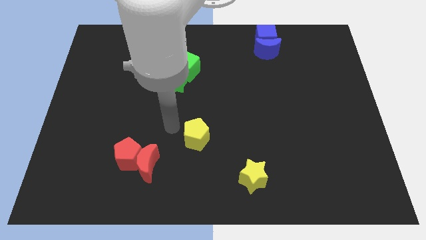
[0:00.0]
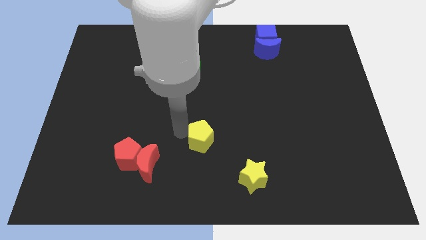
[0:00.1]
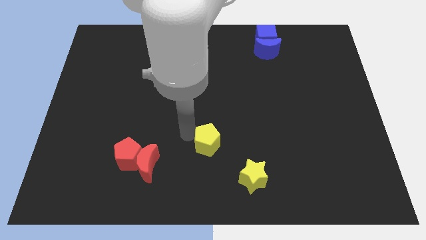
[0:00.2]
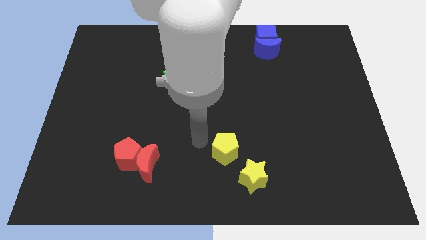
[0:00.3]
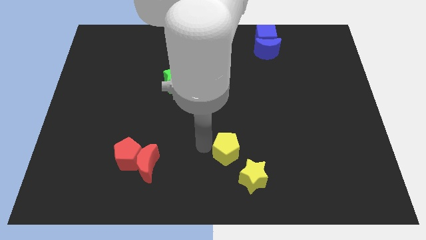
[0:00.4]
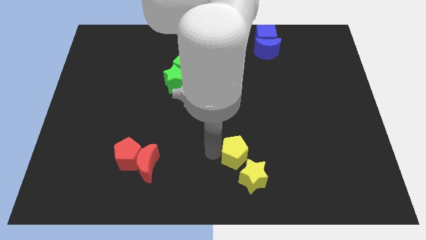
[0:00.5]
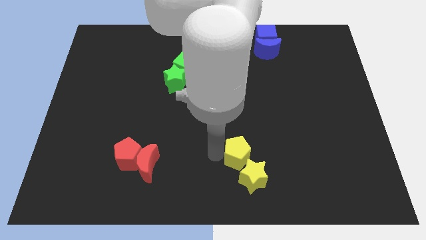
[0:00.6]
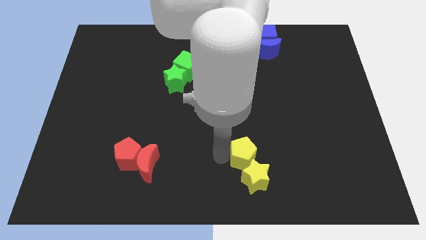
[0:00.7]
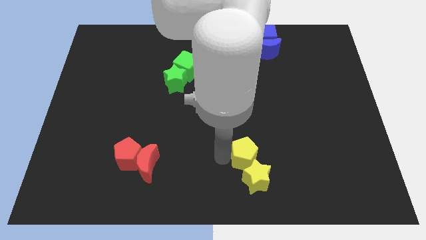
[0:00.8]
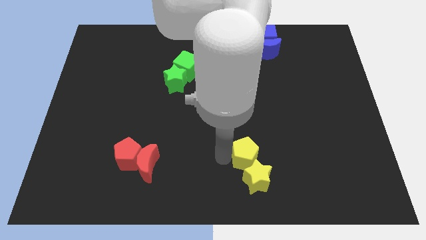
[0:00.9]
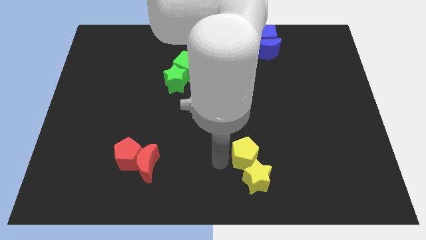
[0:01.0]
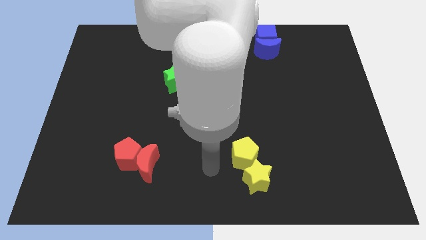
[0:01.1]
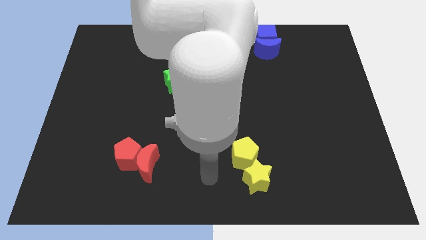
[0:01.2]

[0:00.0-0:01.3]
place te yellow pentagon above the yellow star

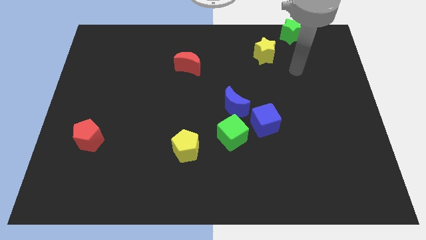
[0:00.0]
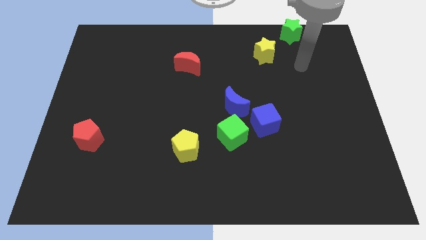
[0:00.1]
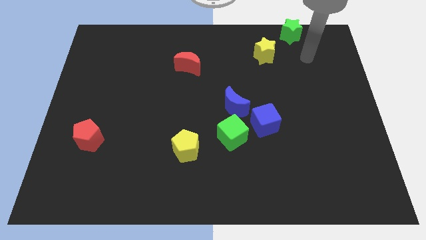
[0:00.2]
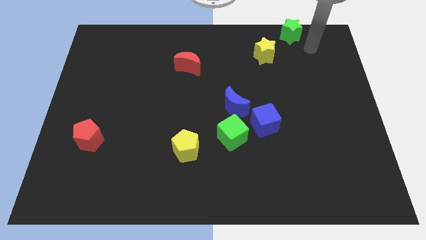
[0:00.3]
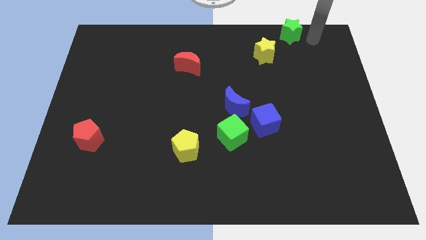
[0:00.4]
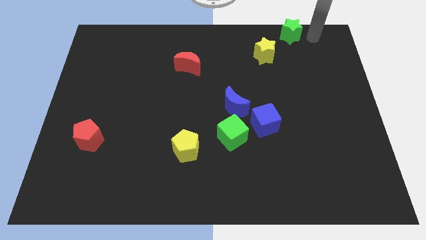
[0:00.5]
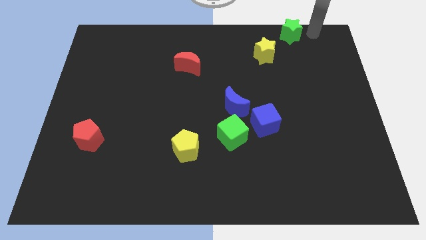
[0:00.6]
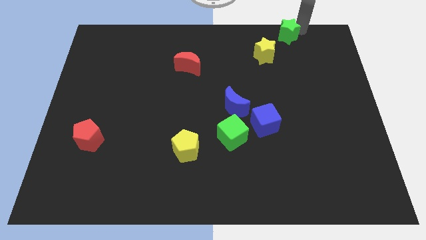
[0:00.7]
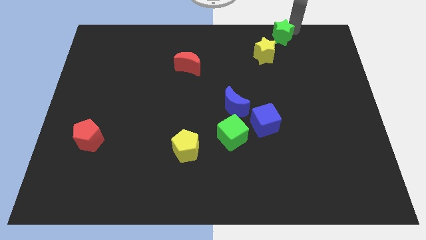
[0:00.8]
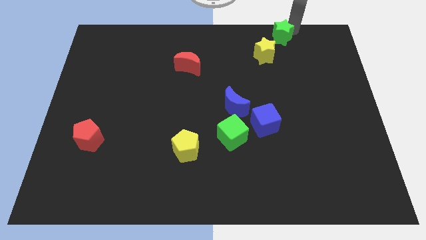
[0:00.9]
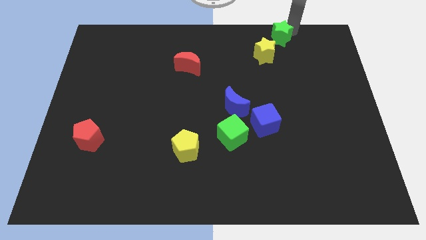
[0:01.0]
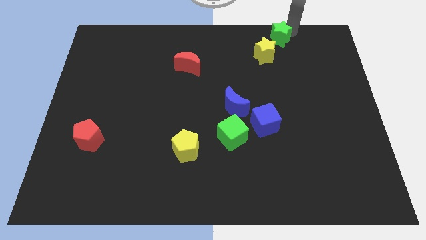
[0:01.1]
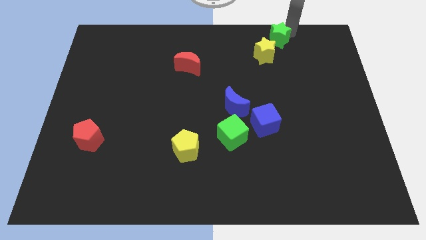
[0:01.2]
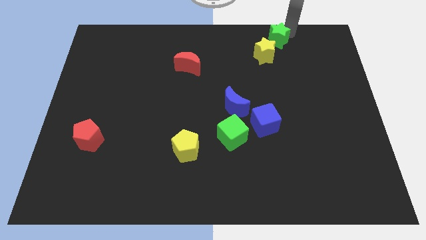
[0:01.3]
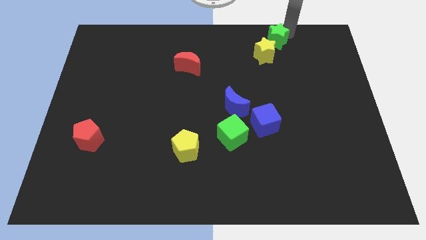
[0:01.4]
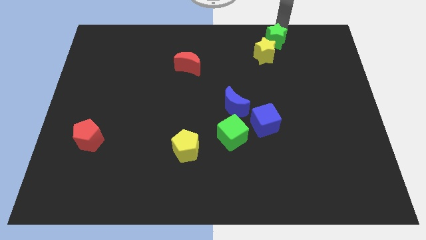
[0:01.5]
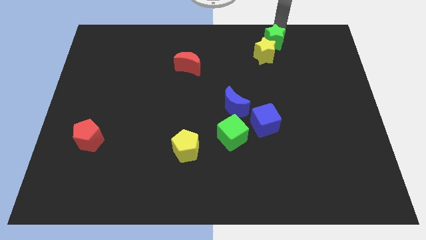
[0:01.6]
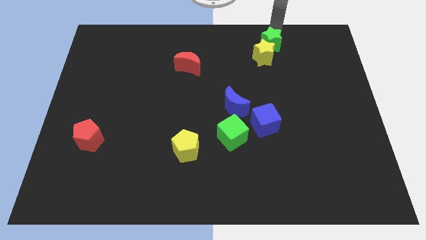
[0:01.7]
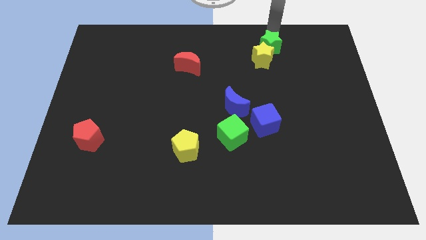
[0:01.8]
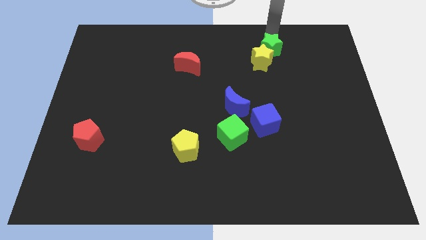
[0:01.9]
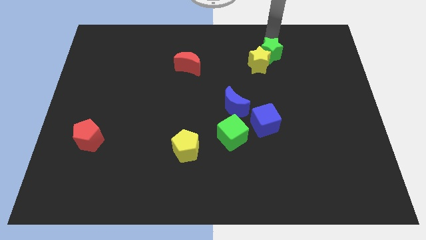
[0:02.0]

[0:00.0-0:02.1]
push green star into yellow star

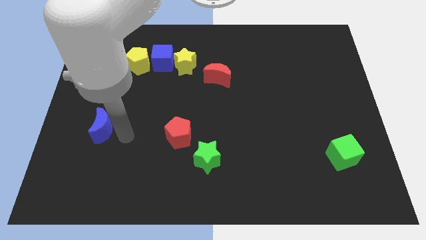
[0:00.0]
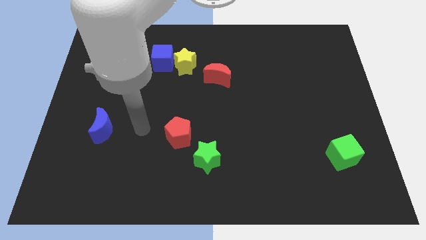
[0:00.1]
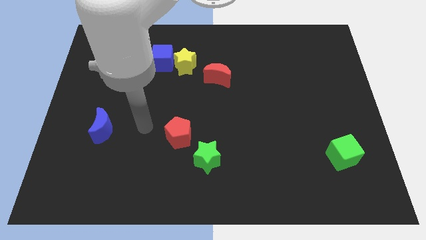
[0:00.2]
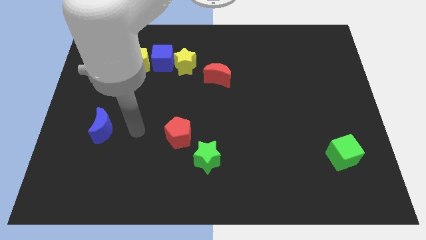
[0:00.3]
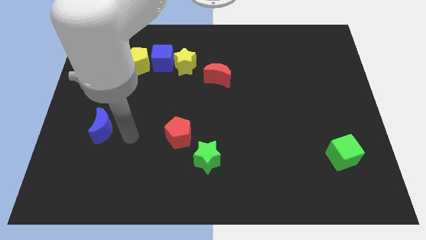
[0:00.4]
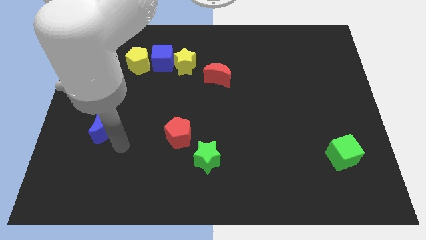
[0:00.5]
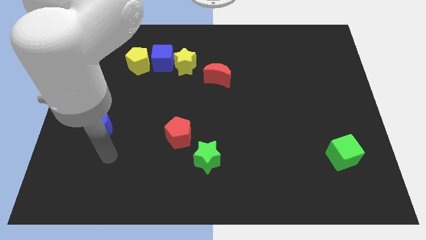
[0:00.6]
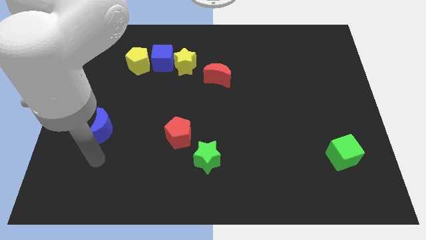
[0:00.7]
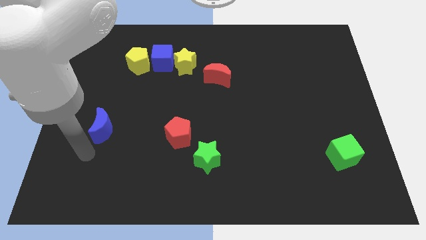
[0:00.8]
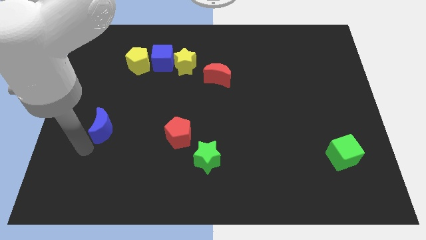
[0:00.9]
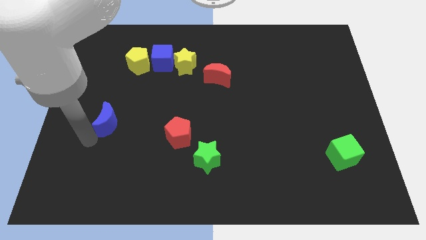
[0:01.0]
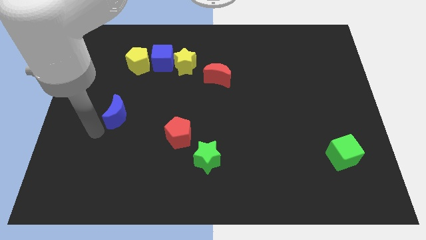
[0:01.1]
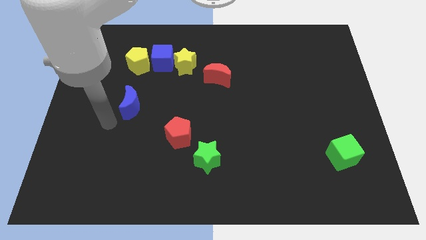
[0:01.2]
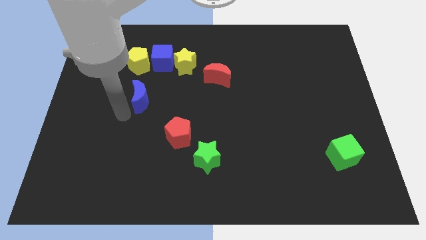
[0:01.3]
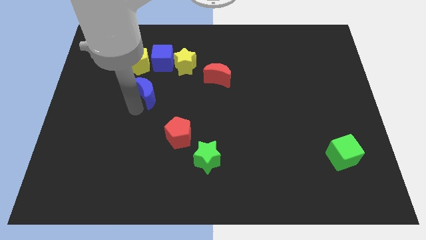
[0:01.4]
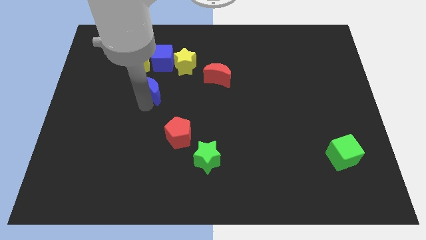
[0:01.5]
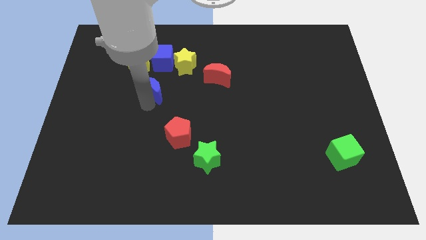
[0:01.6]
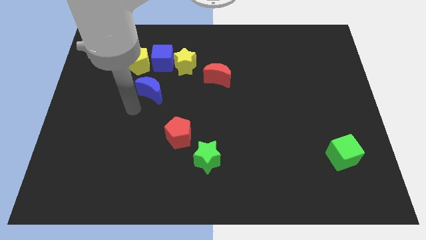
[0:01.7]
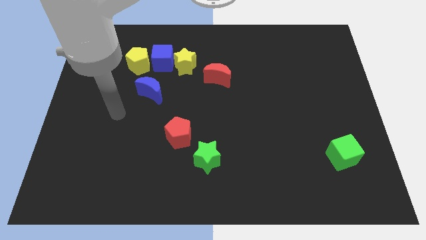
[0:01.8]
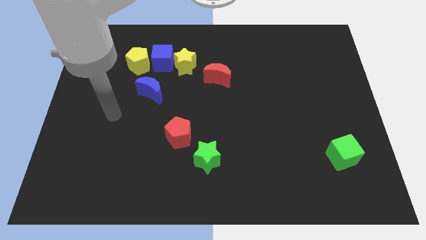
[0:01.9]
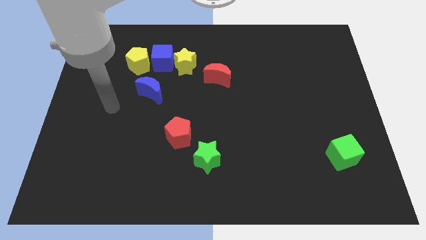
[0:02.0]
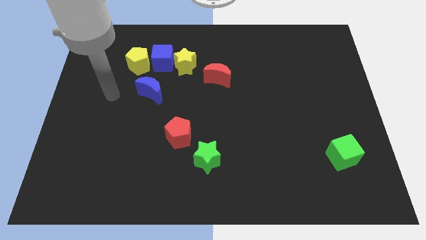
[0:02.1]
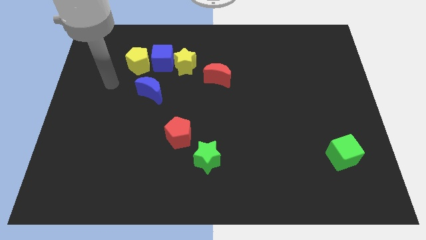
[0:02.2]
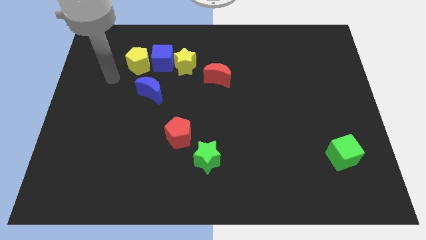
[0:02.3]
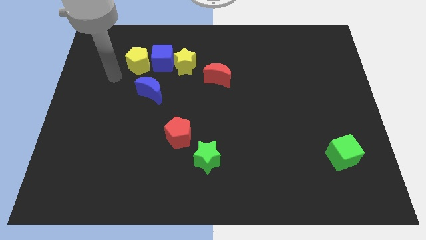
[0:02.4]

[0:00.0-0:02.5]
push blue crescent below yellow pentagon

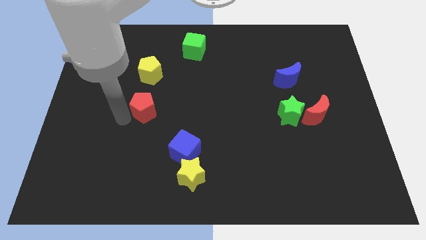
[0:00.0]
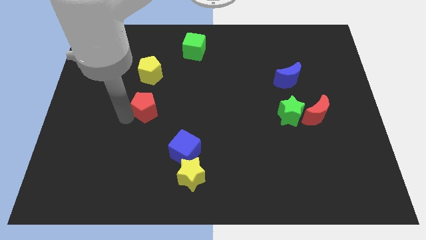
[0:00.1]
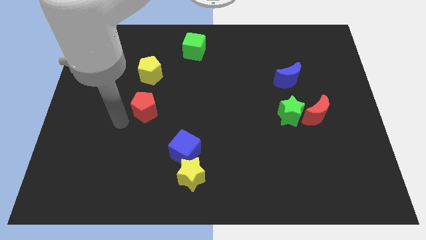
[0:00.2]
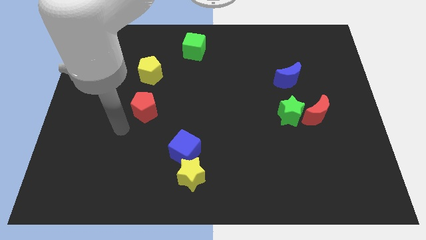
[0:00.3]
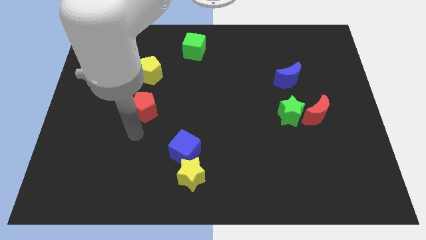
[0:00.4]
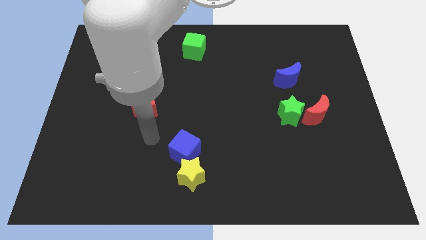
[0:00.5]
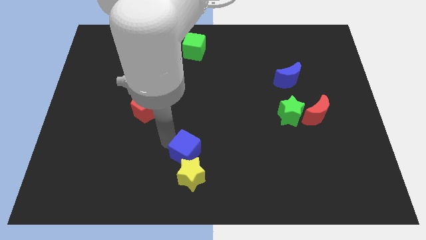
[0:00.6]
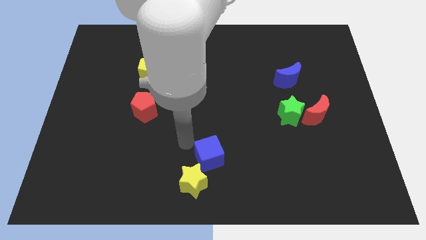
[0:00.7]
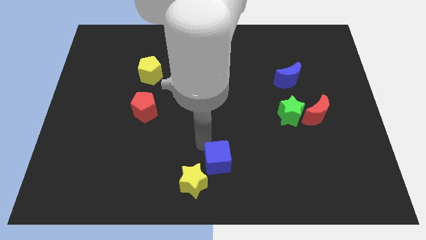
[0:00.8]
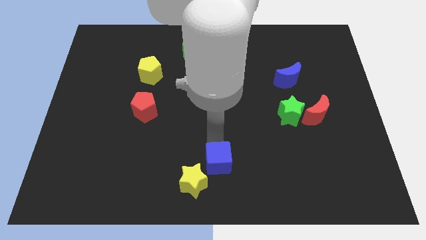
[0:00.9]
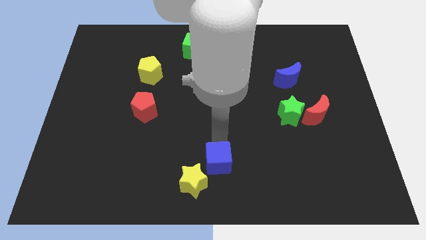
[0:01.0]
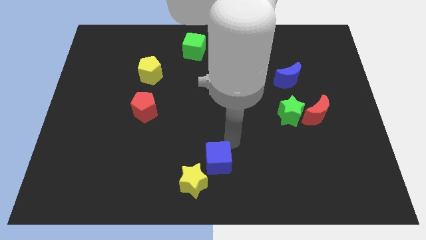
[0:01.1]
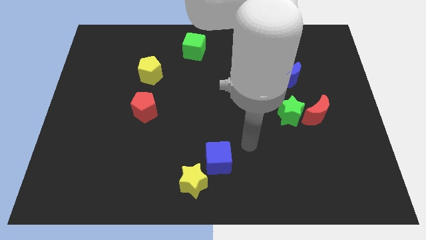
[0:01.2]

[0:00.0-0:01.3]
slide the blue cube top right to yellow star

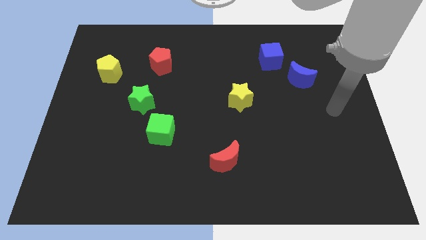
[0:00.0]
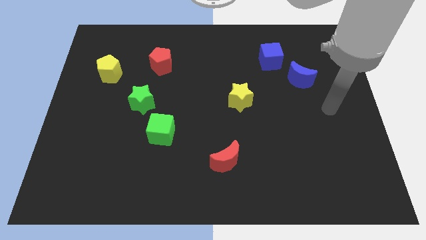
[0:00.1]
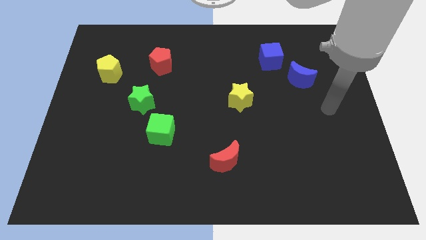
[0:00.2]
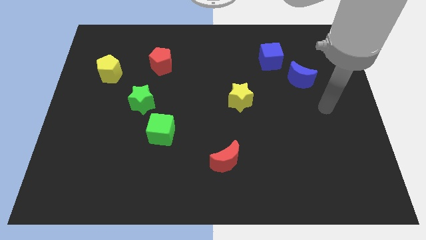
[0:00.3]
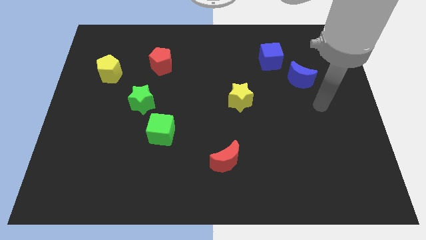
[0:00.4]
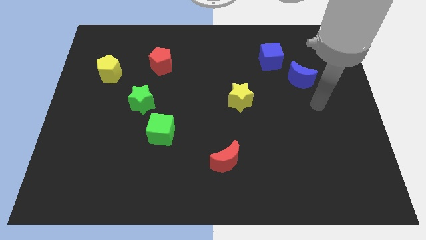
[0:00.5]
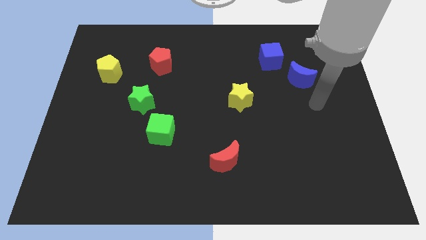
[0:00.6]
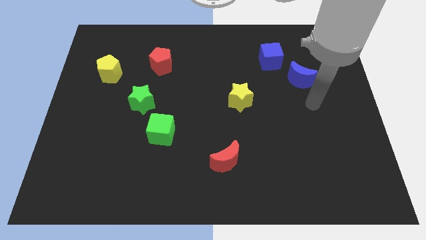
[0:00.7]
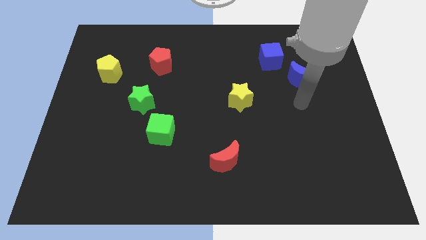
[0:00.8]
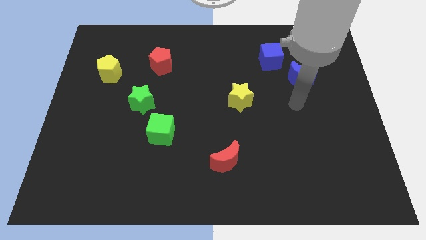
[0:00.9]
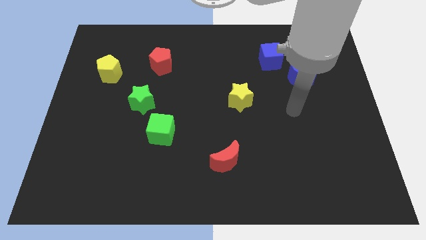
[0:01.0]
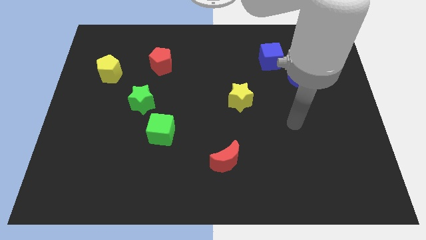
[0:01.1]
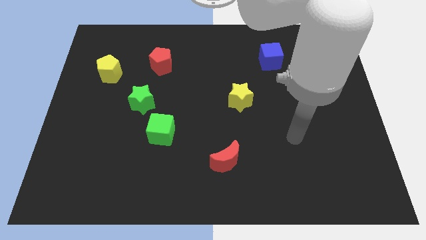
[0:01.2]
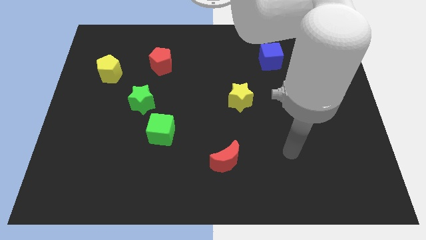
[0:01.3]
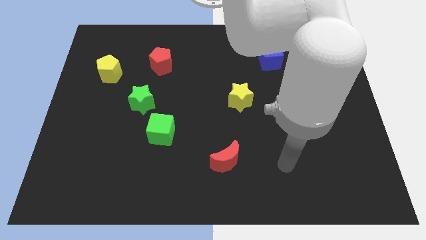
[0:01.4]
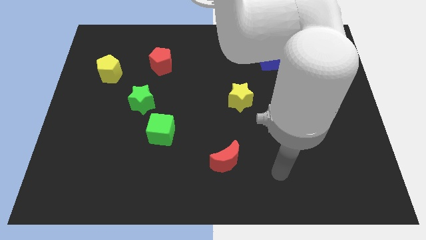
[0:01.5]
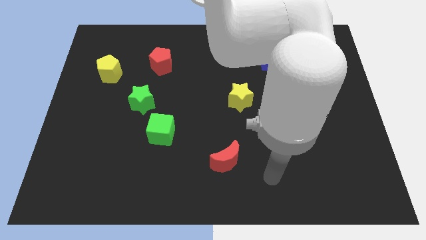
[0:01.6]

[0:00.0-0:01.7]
move the arm towards the bottom of the board
